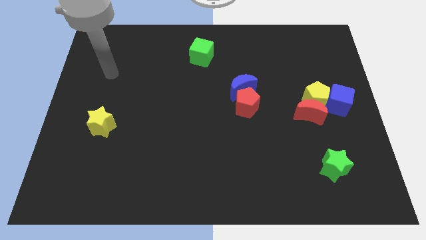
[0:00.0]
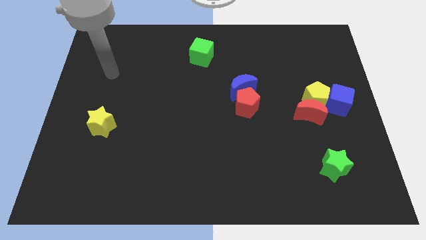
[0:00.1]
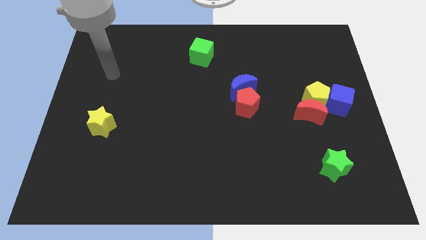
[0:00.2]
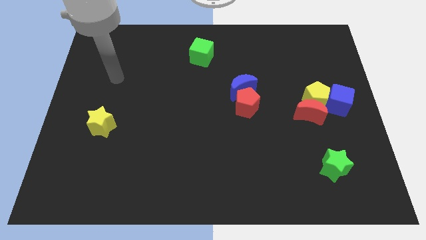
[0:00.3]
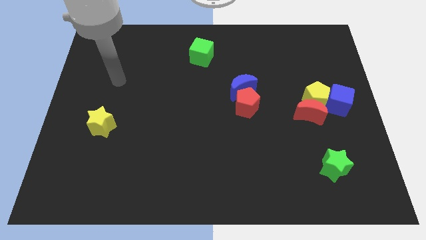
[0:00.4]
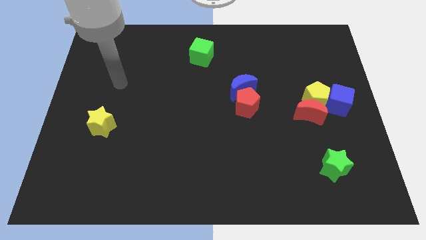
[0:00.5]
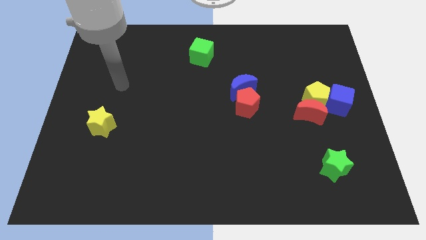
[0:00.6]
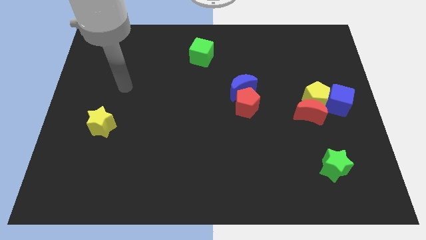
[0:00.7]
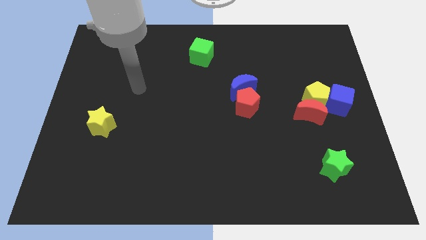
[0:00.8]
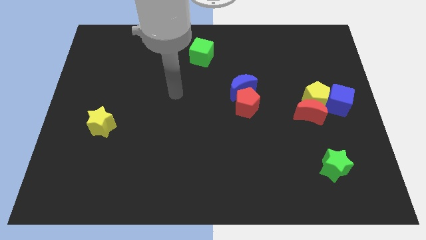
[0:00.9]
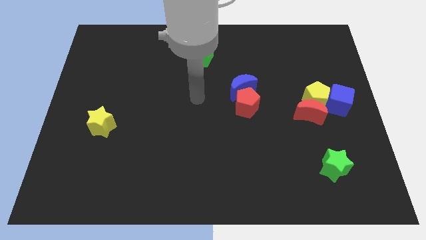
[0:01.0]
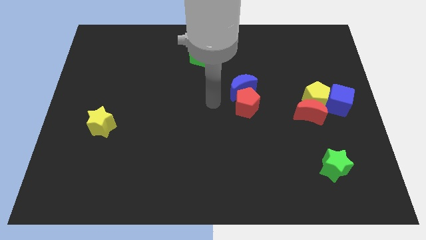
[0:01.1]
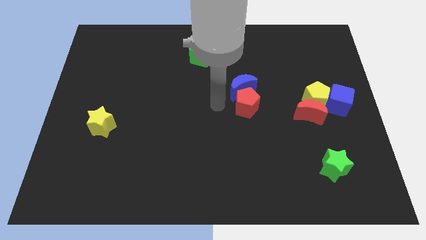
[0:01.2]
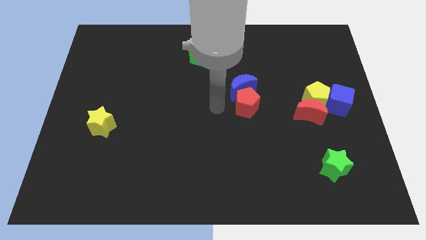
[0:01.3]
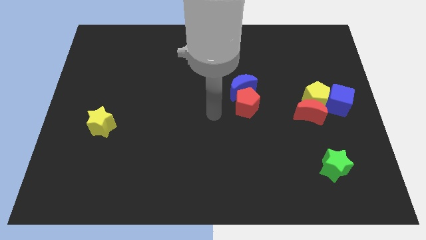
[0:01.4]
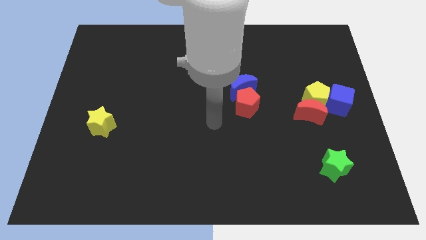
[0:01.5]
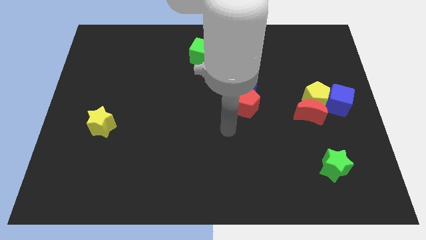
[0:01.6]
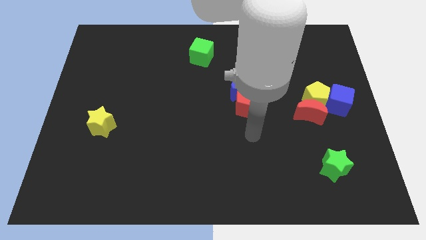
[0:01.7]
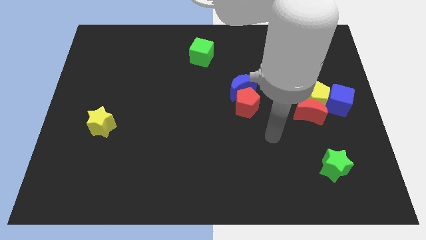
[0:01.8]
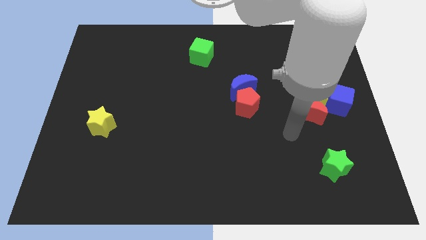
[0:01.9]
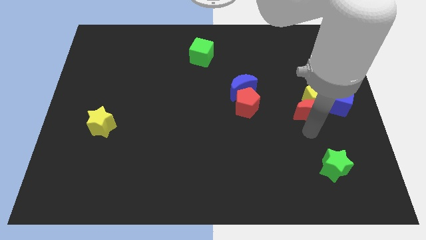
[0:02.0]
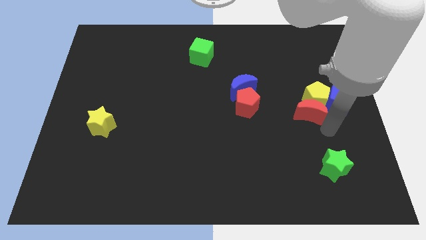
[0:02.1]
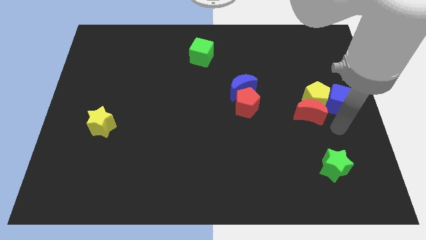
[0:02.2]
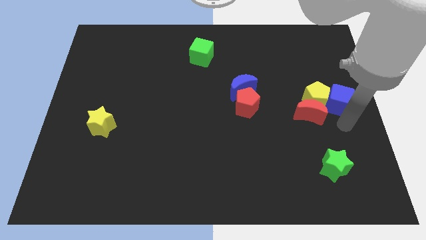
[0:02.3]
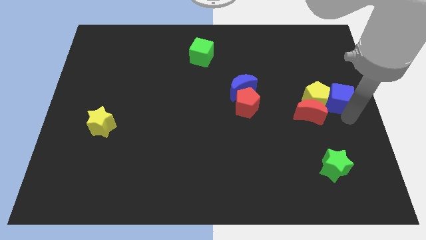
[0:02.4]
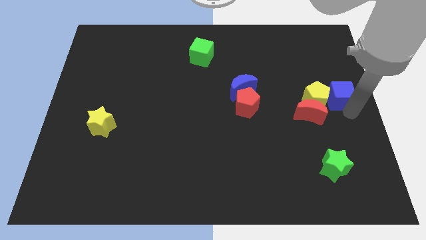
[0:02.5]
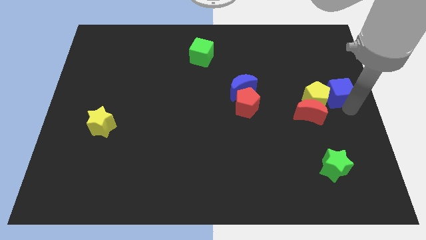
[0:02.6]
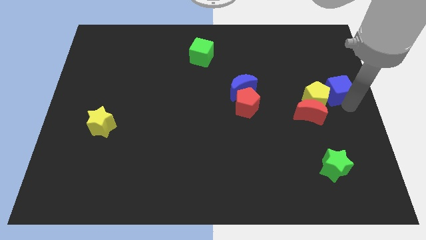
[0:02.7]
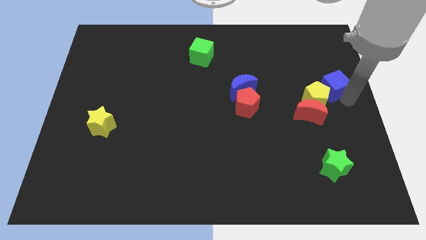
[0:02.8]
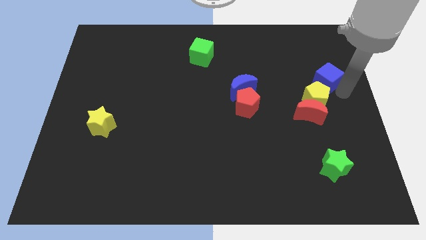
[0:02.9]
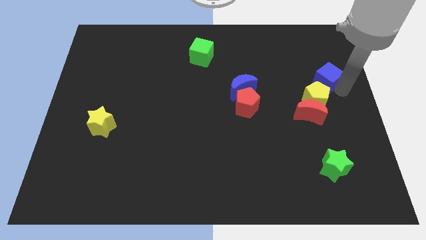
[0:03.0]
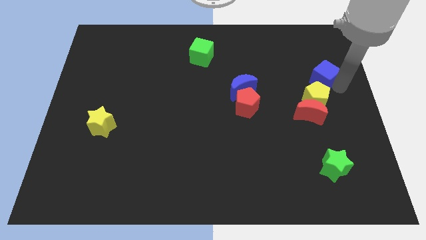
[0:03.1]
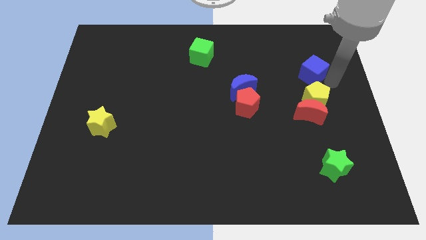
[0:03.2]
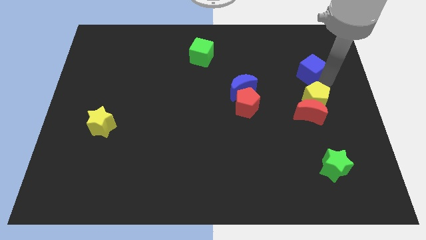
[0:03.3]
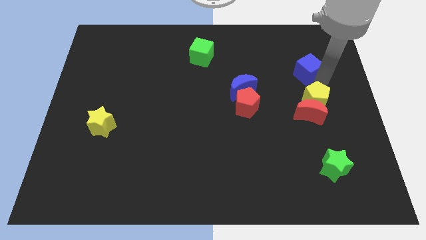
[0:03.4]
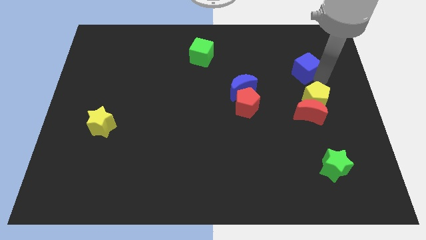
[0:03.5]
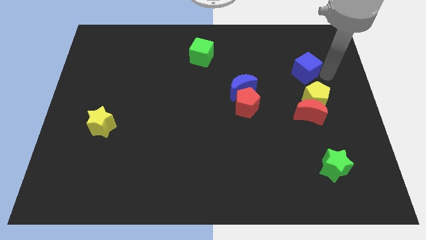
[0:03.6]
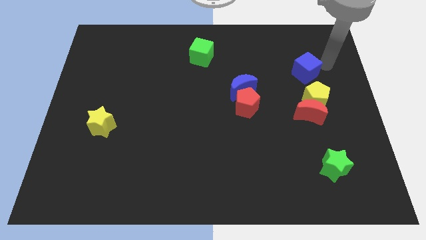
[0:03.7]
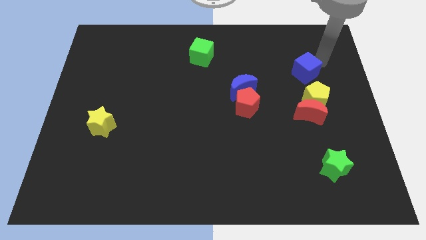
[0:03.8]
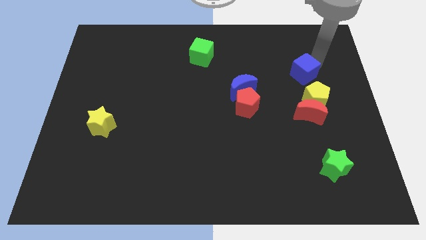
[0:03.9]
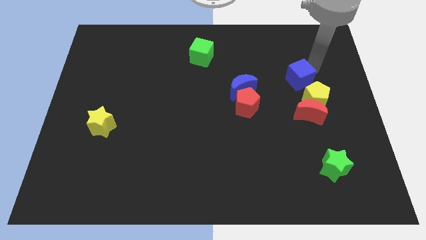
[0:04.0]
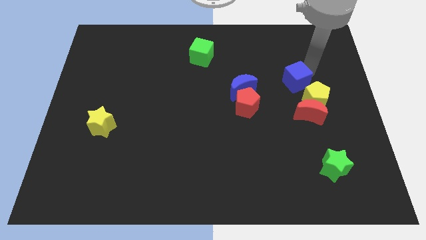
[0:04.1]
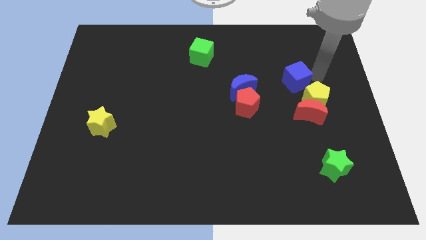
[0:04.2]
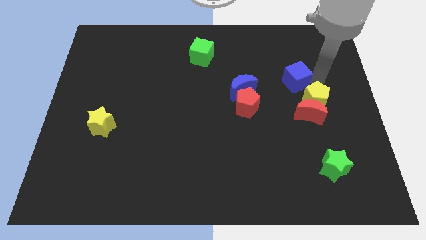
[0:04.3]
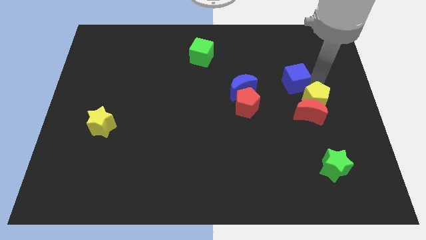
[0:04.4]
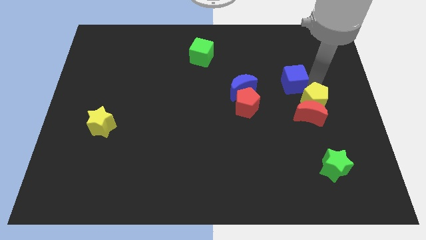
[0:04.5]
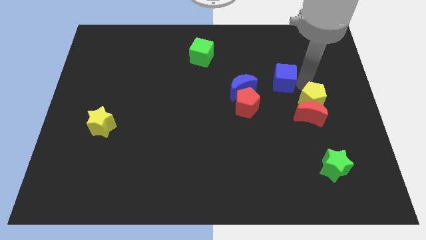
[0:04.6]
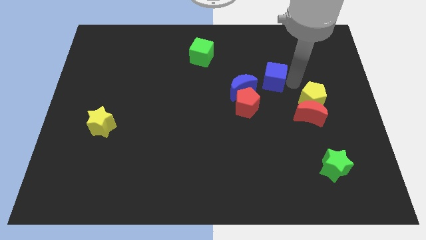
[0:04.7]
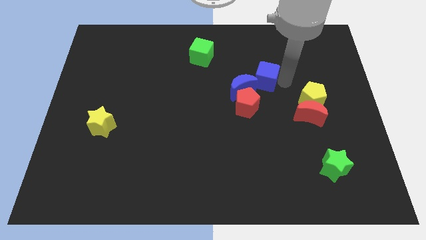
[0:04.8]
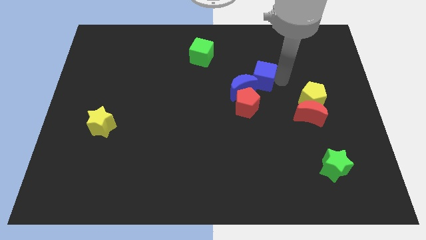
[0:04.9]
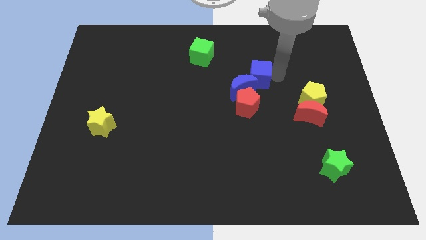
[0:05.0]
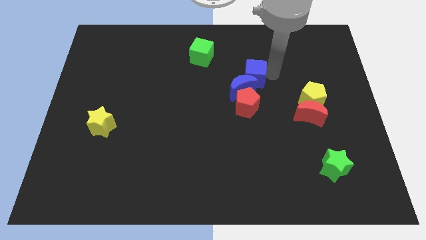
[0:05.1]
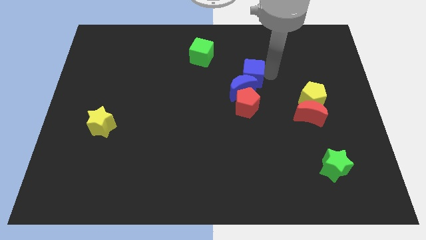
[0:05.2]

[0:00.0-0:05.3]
put the blue cube to the blue moon

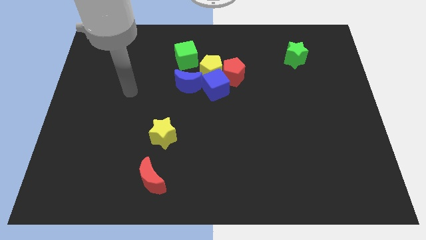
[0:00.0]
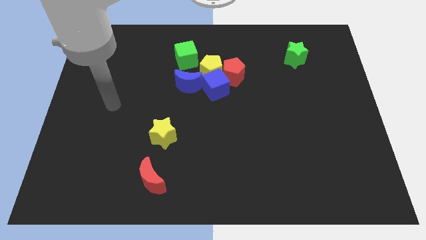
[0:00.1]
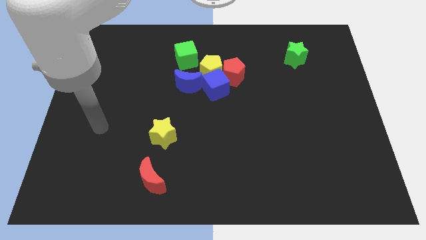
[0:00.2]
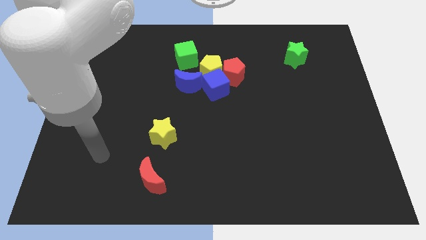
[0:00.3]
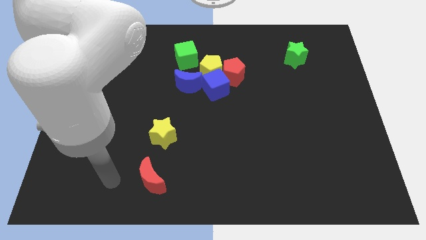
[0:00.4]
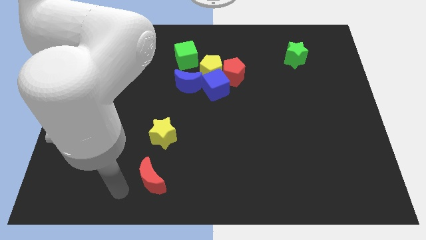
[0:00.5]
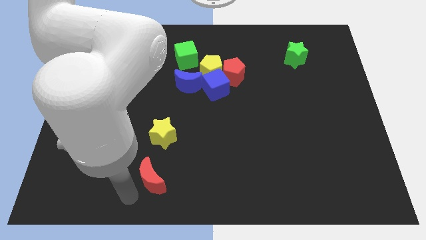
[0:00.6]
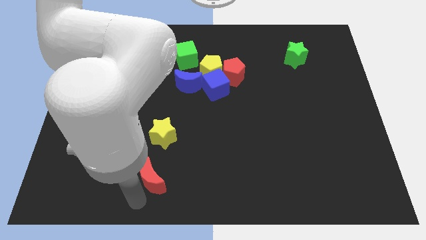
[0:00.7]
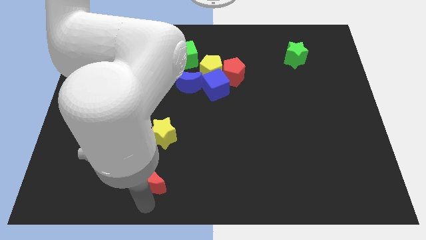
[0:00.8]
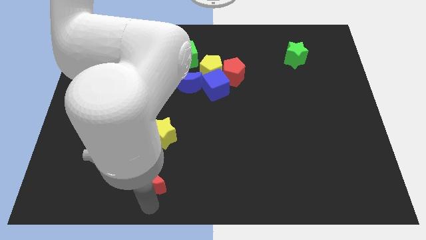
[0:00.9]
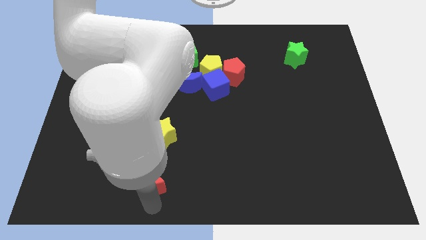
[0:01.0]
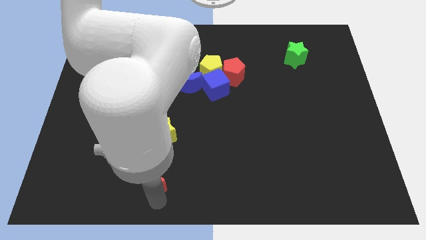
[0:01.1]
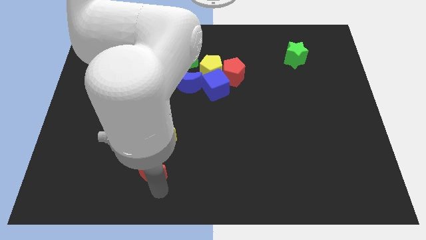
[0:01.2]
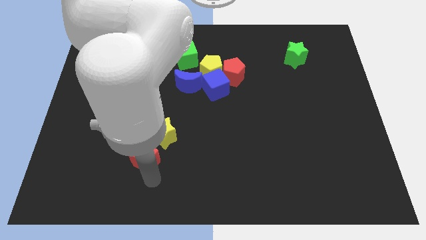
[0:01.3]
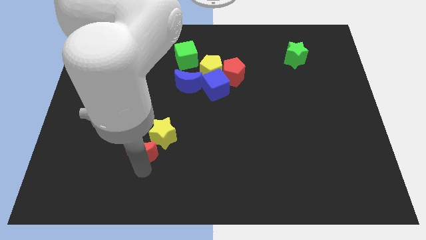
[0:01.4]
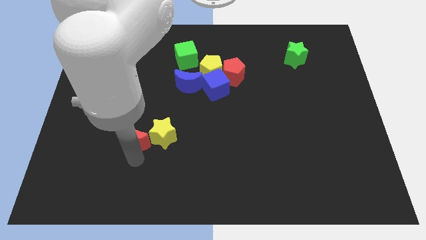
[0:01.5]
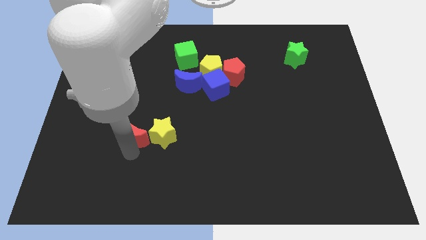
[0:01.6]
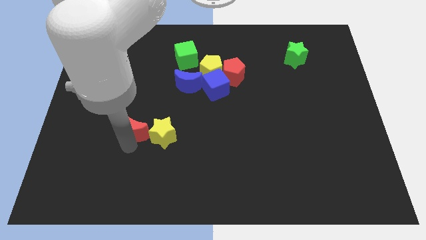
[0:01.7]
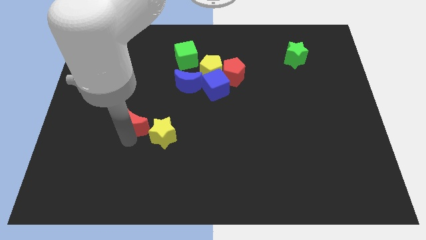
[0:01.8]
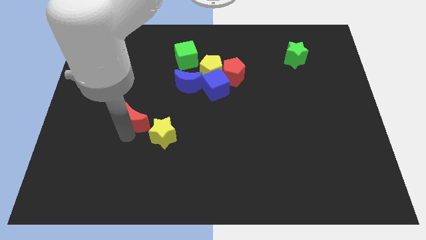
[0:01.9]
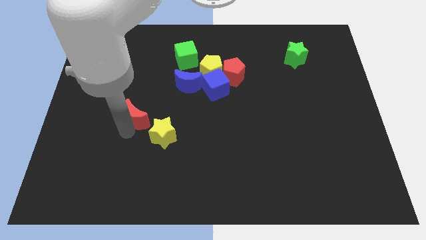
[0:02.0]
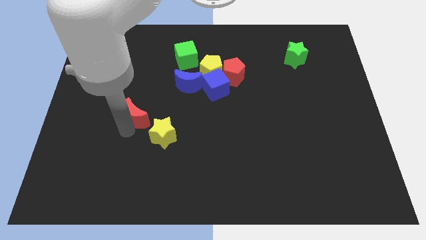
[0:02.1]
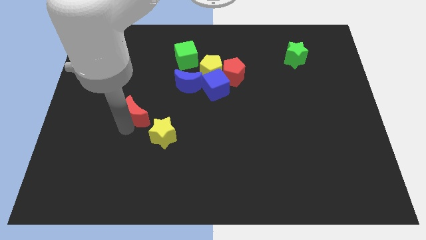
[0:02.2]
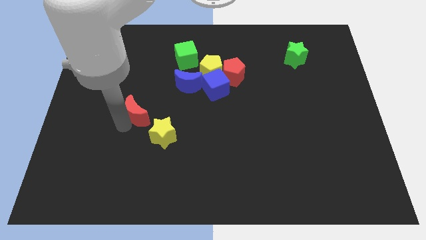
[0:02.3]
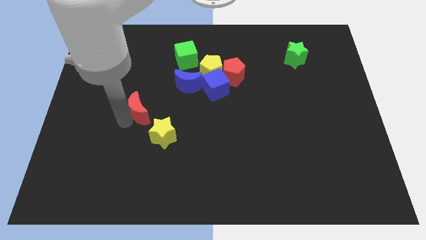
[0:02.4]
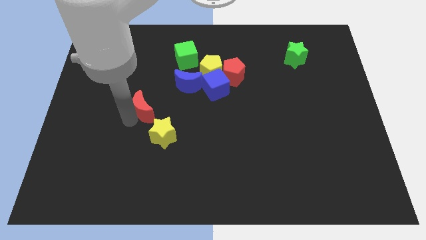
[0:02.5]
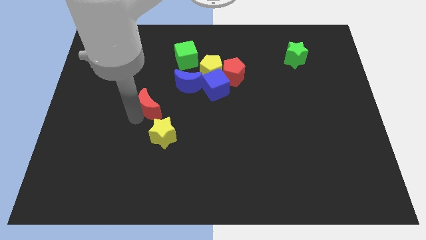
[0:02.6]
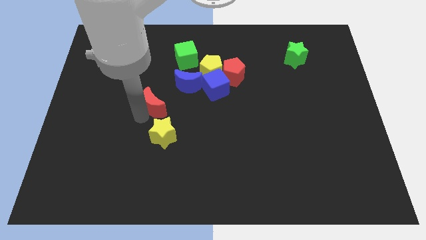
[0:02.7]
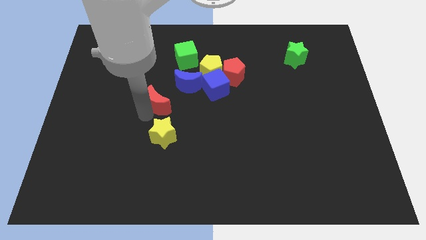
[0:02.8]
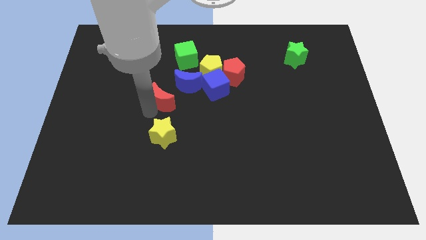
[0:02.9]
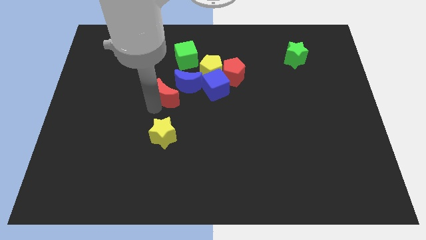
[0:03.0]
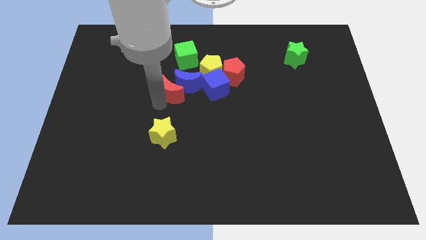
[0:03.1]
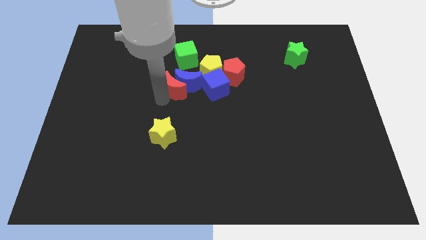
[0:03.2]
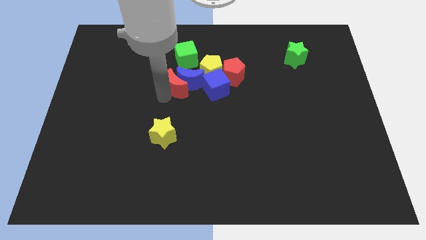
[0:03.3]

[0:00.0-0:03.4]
put the red moon next to the blue moon
